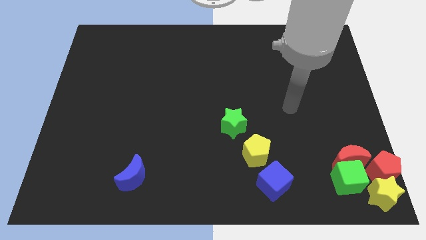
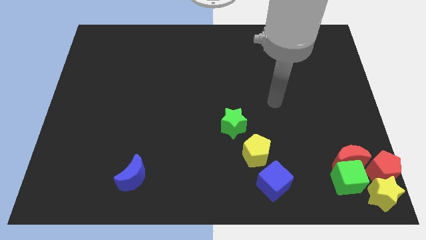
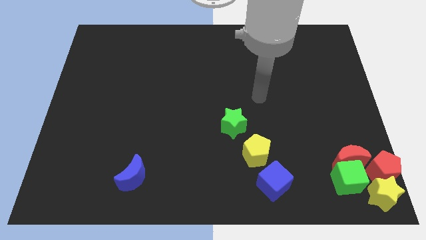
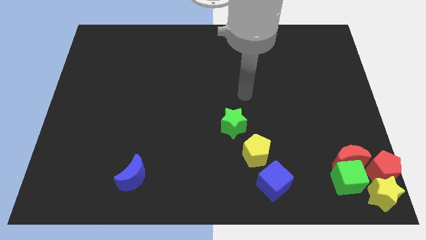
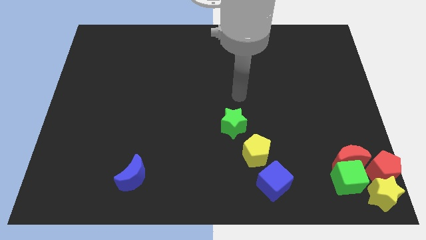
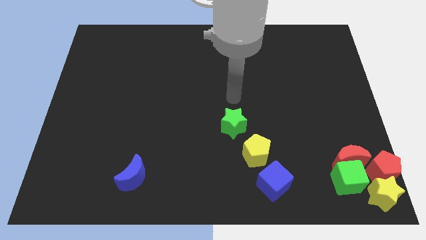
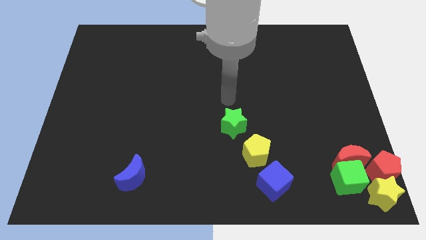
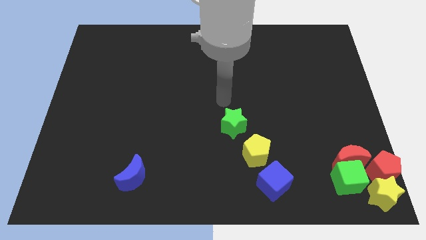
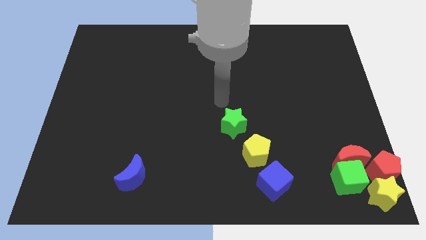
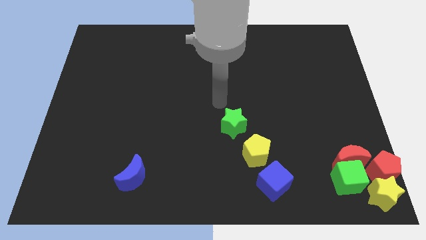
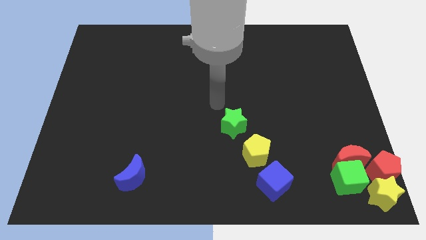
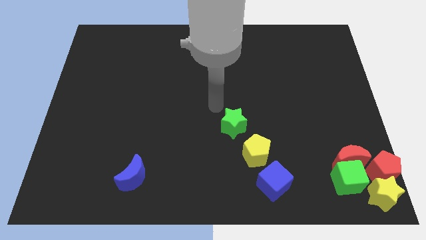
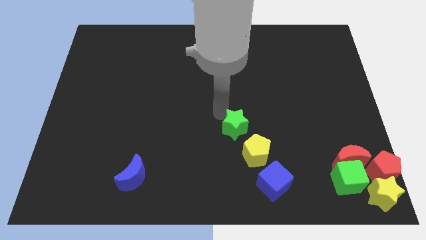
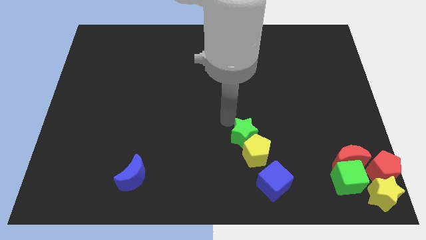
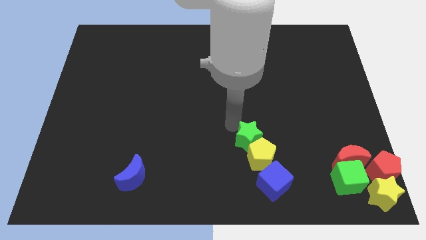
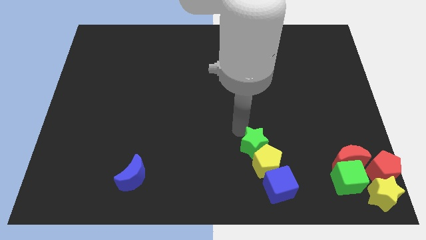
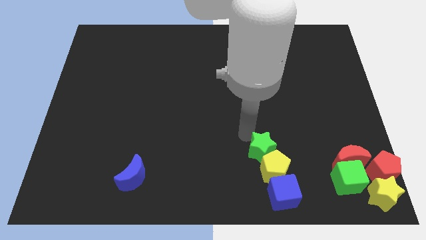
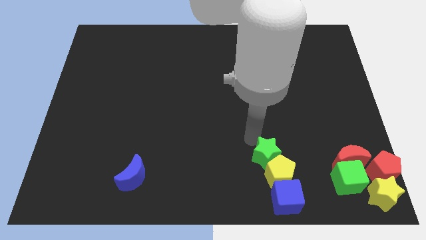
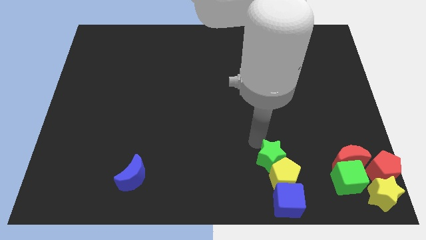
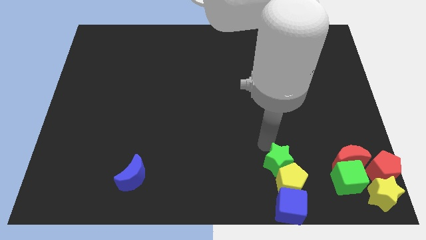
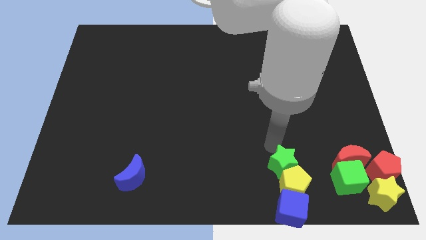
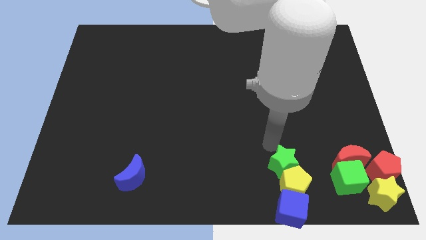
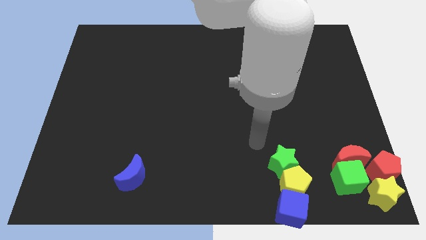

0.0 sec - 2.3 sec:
move the green star yellow pentagonand blue cube slightly down

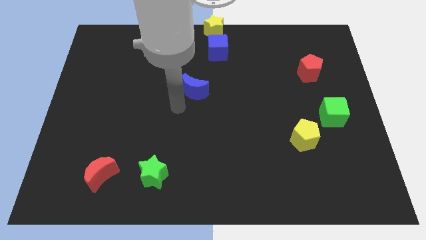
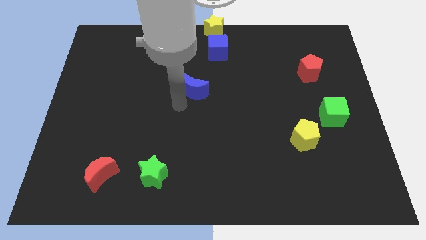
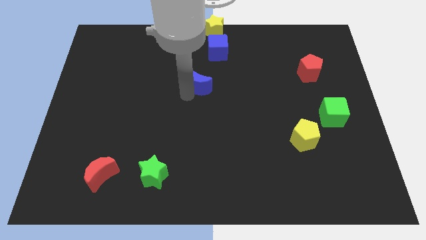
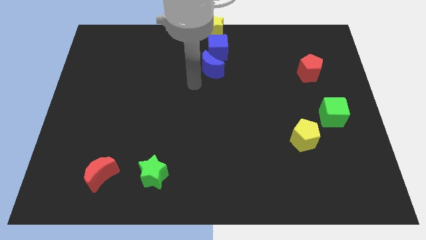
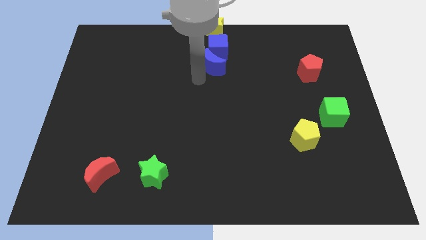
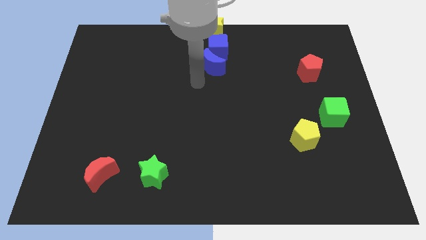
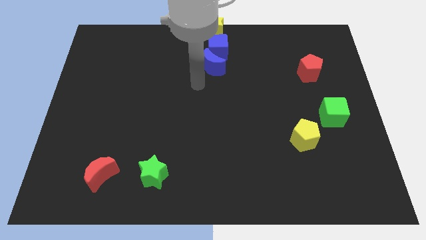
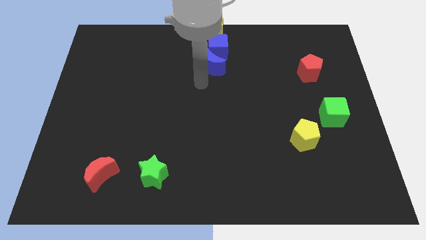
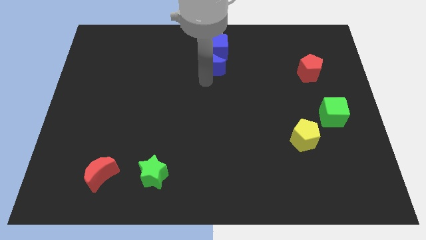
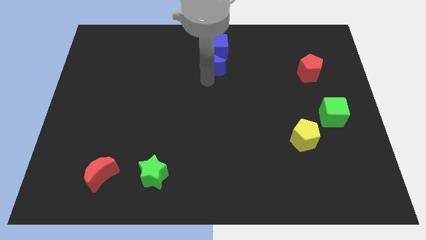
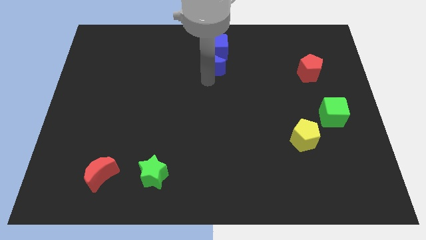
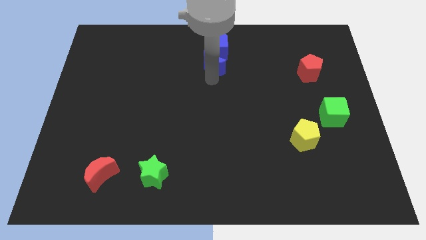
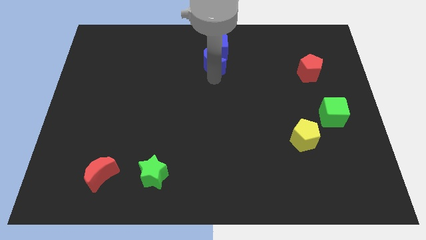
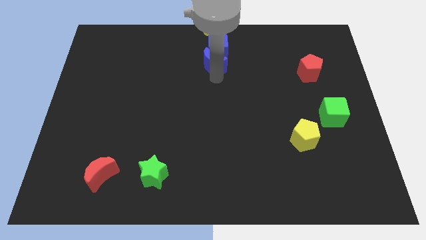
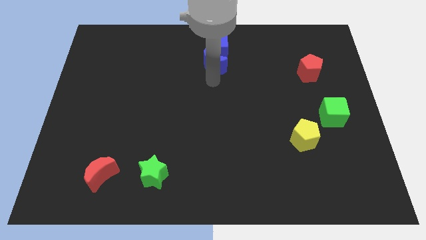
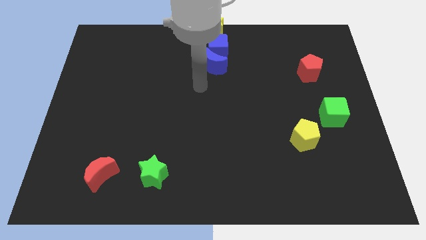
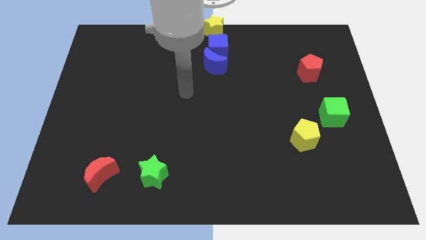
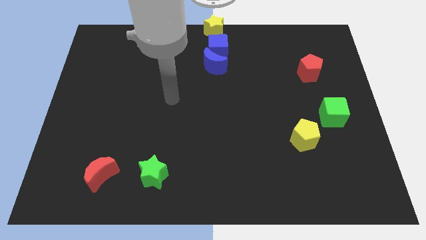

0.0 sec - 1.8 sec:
move the blue moon into the blue cube

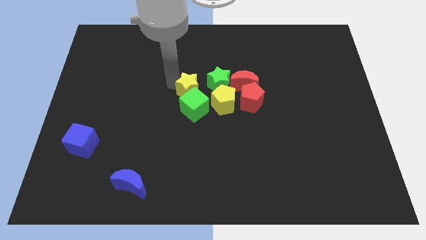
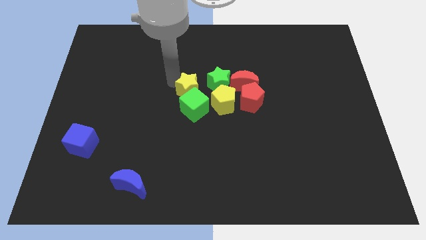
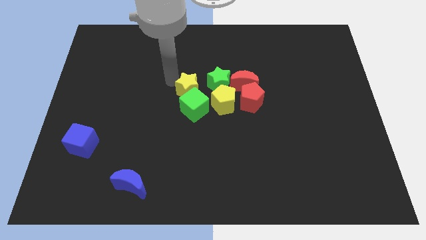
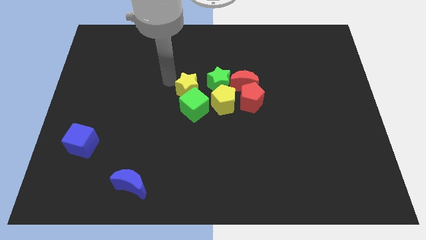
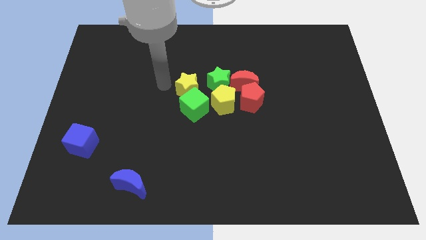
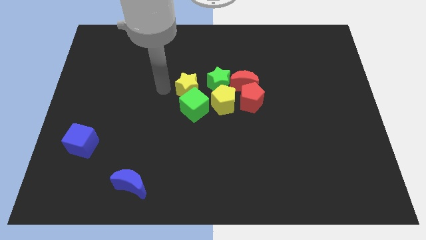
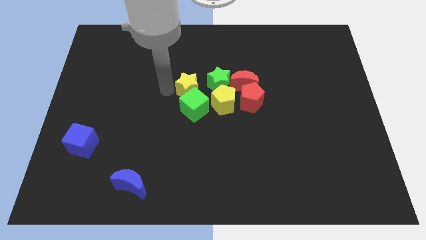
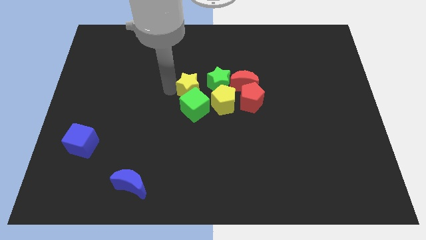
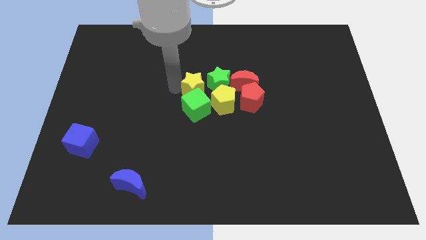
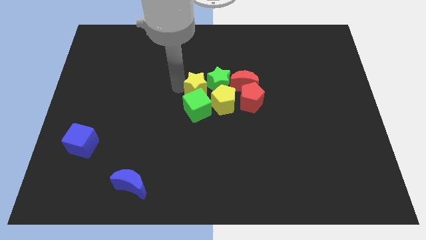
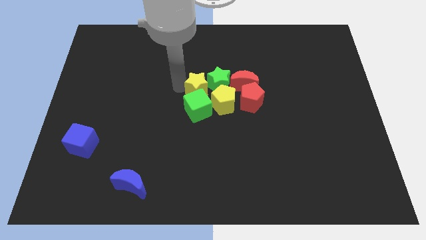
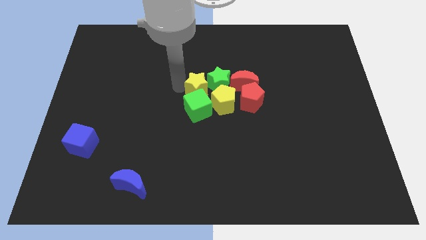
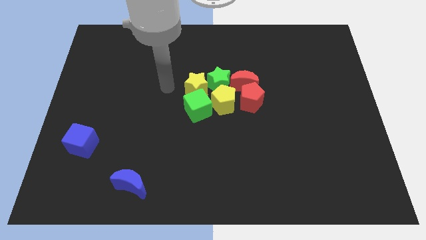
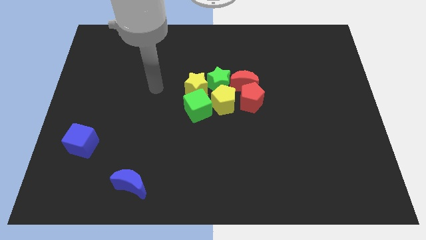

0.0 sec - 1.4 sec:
move the yellow star and green cube slightly close to the left side of the green star and yellow pentagon

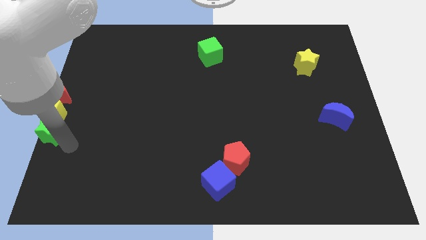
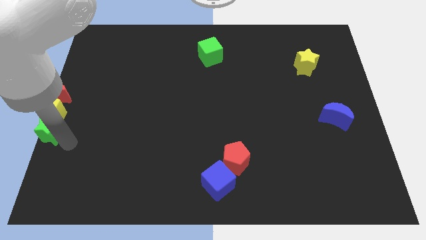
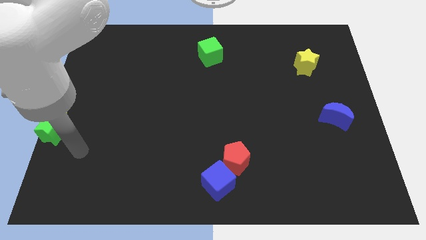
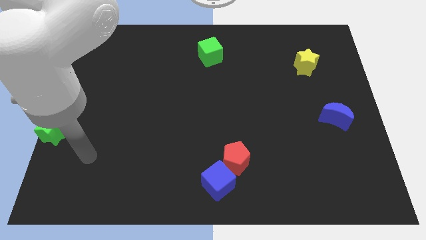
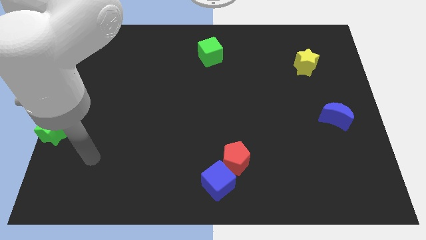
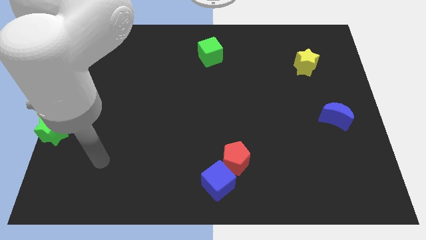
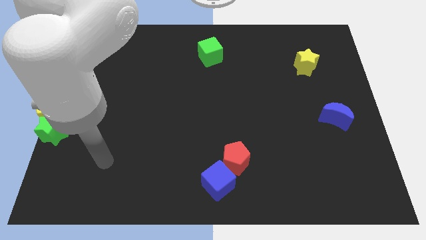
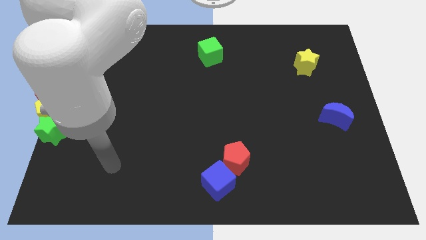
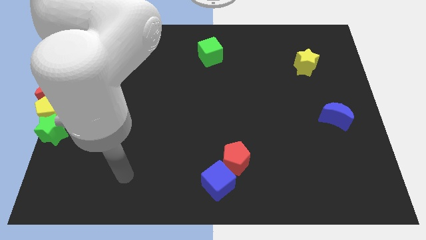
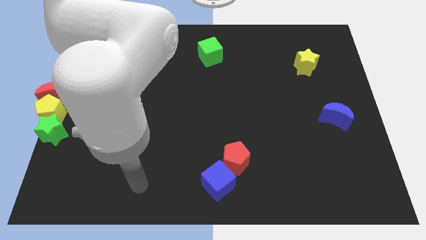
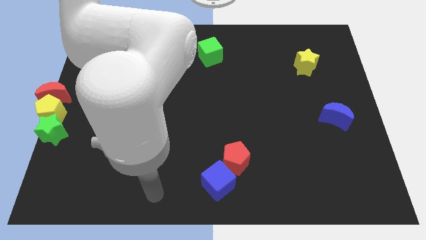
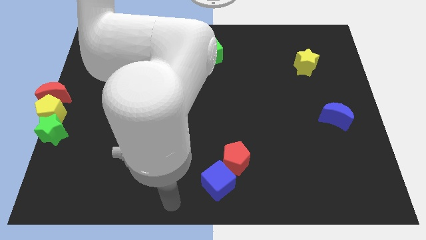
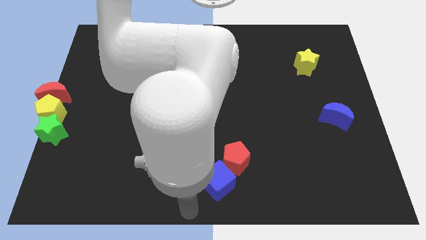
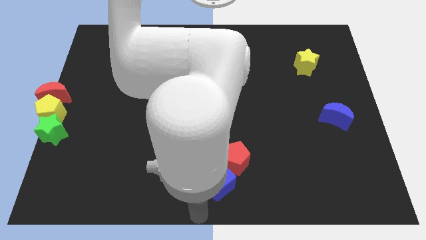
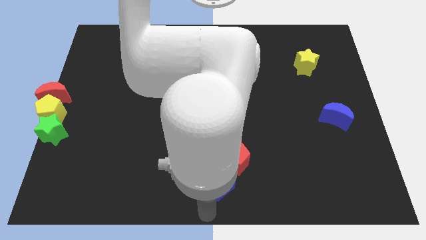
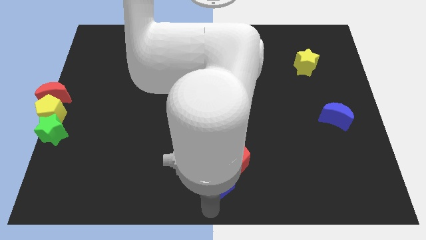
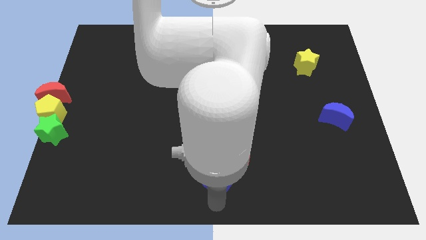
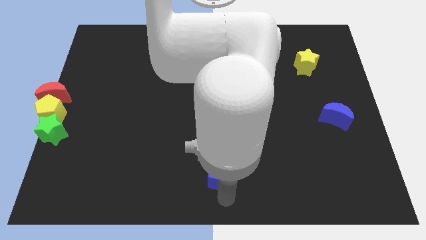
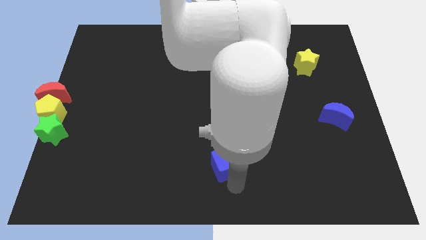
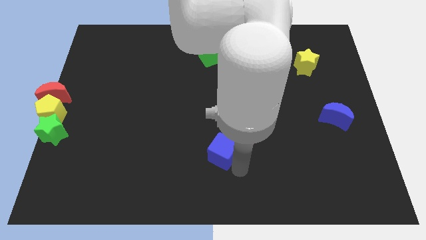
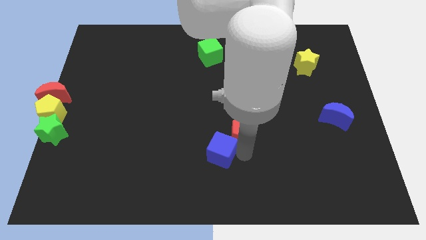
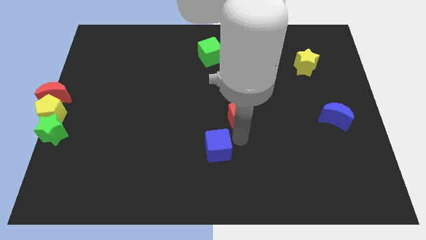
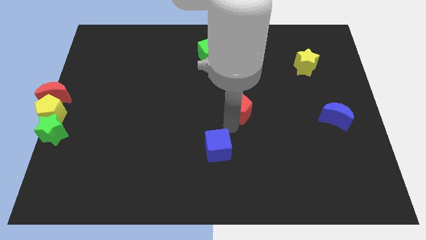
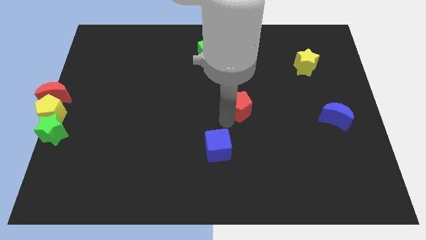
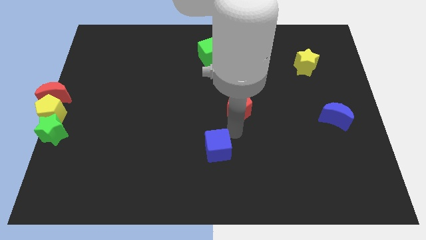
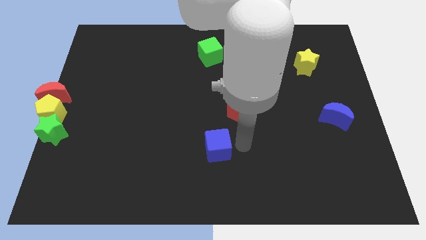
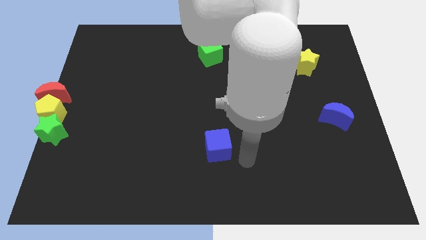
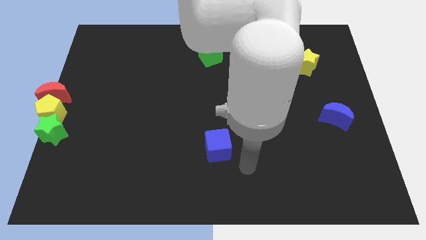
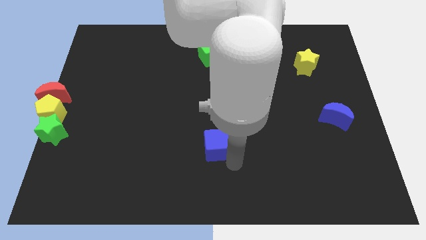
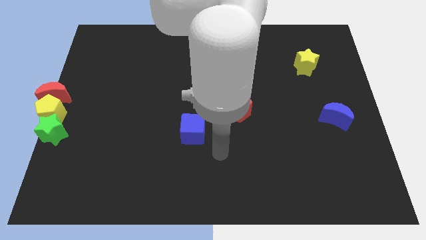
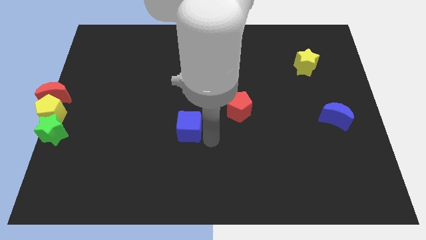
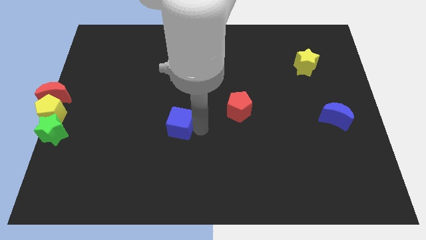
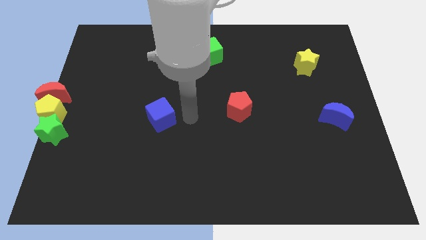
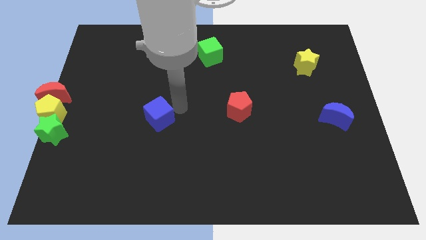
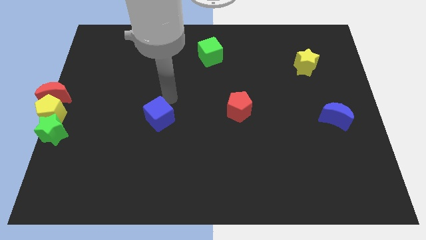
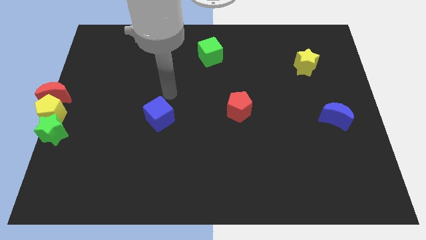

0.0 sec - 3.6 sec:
move the blue cube and red pentagon away from each other

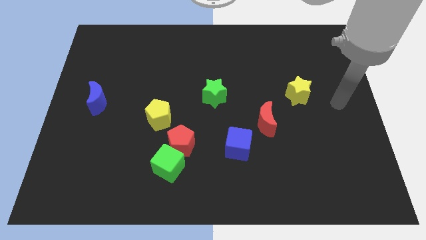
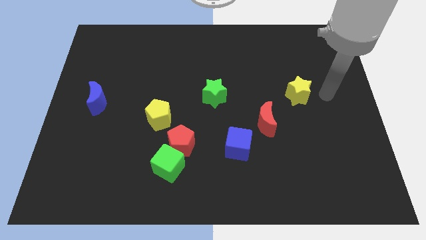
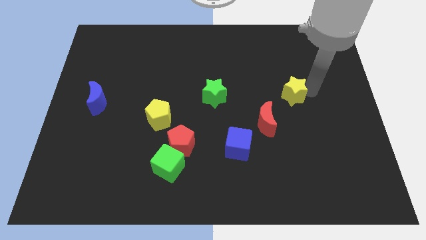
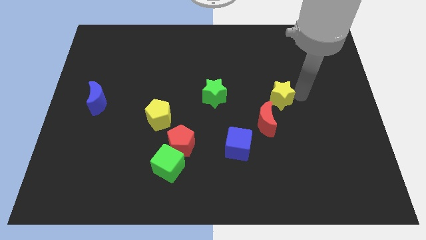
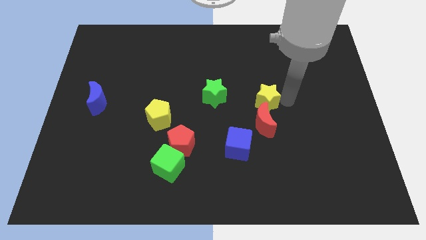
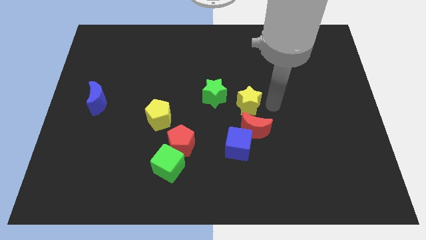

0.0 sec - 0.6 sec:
move the yellow star to the top of the red crescent
